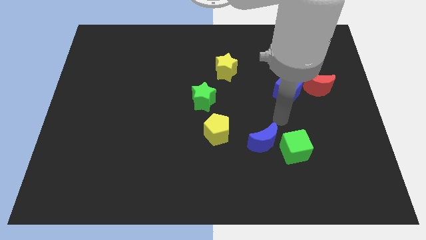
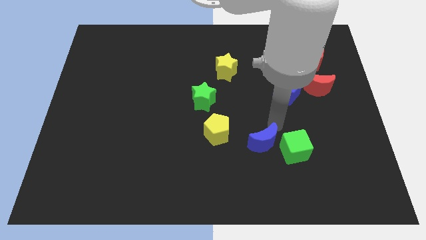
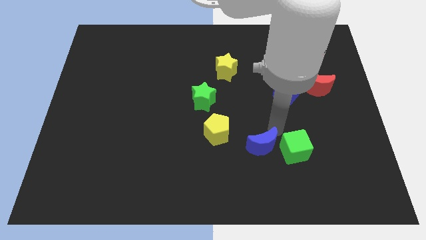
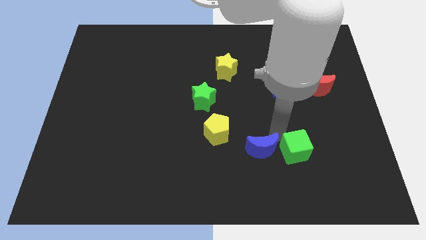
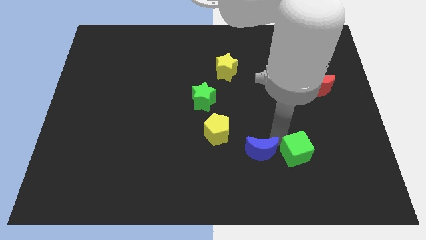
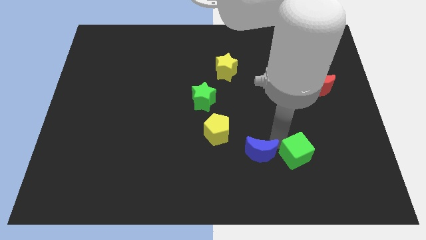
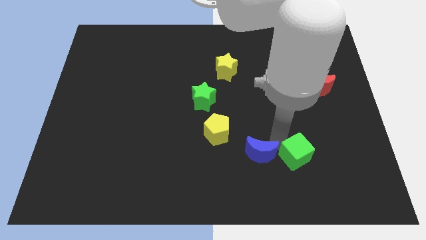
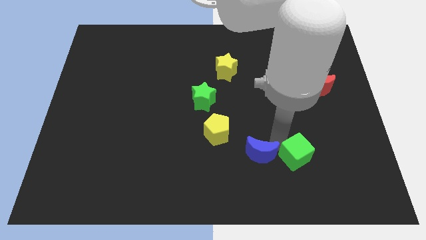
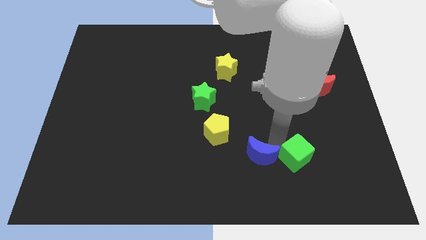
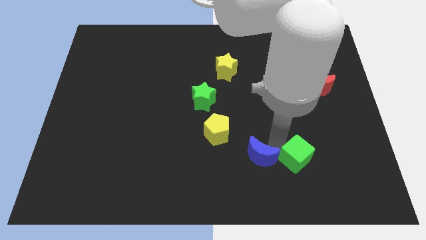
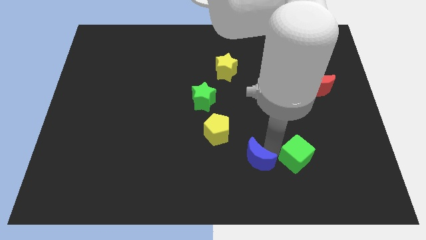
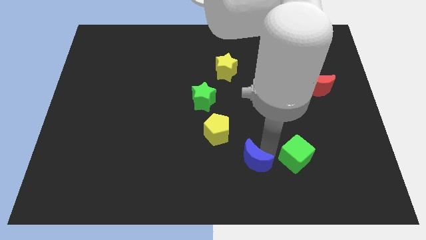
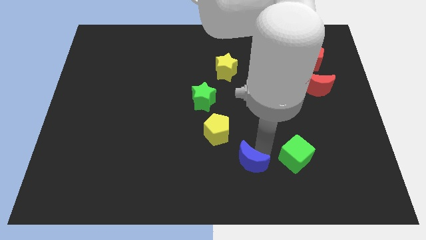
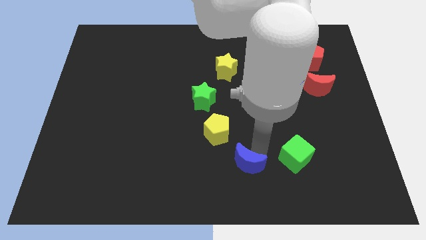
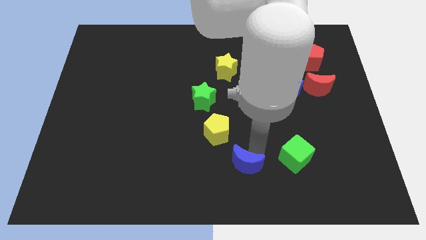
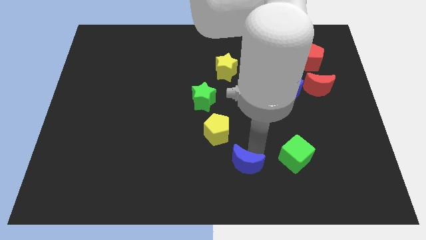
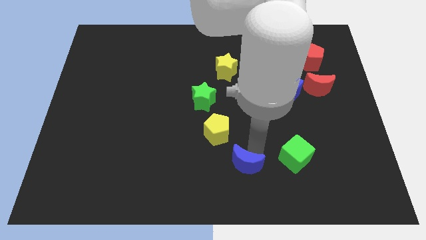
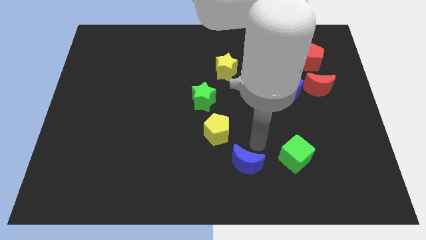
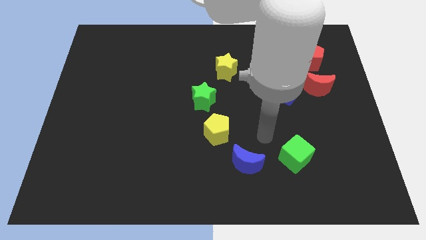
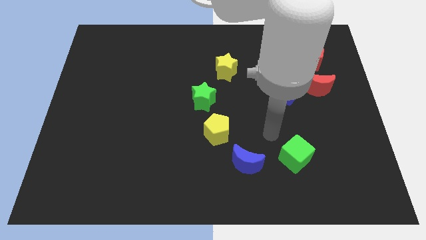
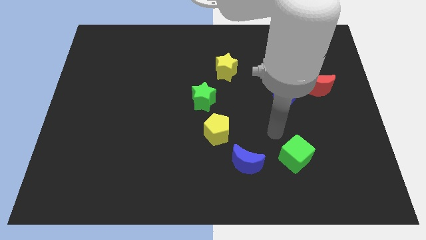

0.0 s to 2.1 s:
push the blue moon away from the green cube

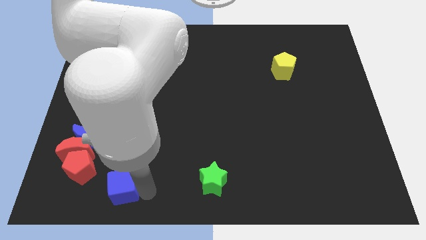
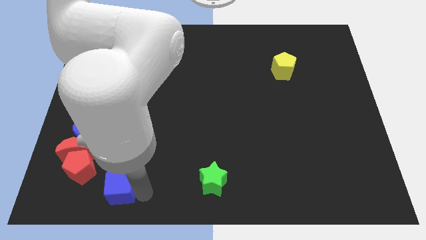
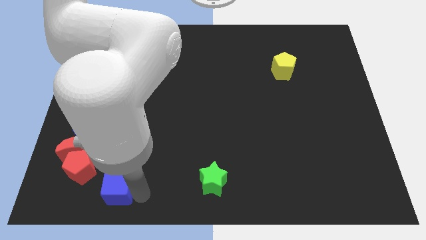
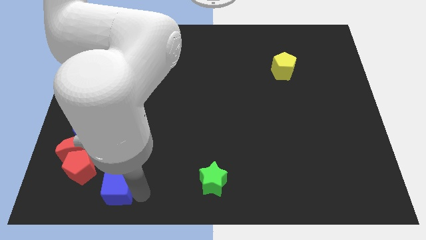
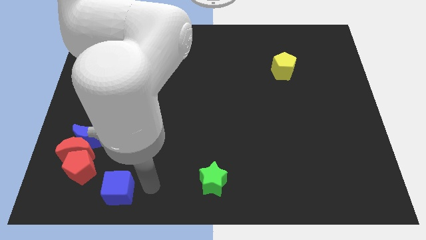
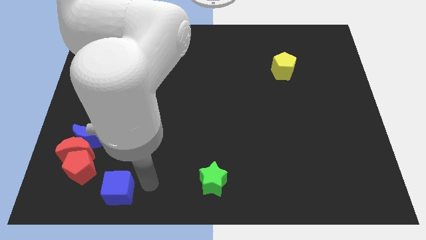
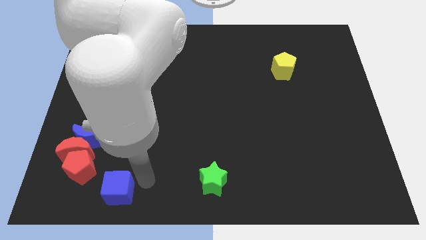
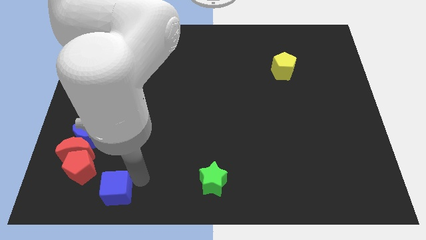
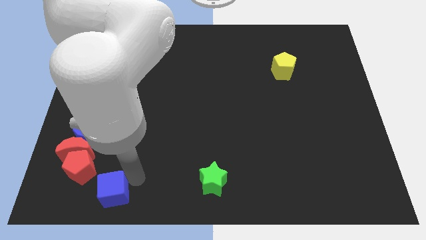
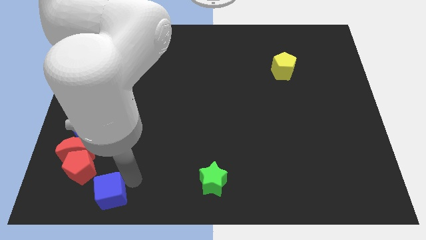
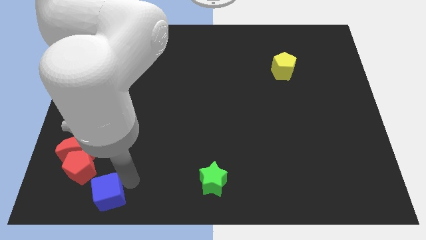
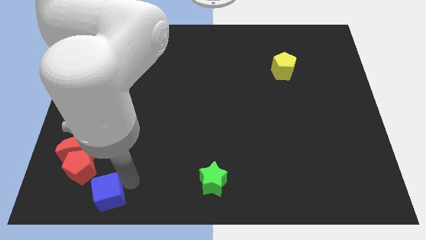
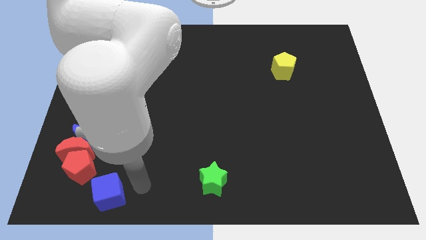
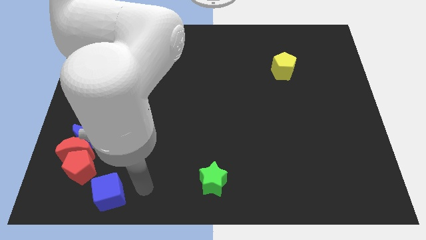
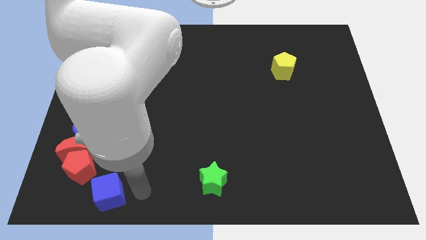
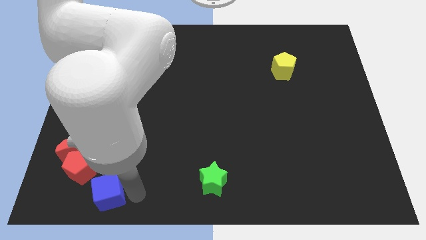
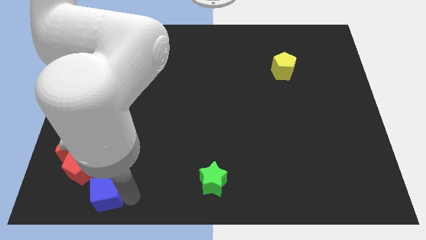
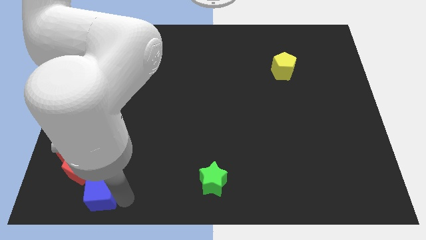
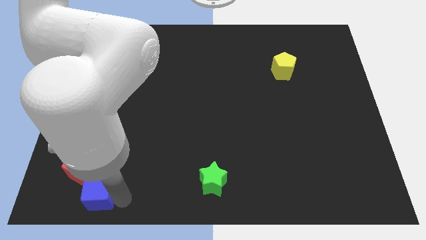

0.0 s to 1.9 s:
place the blue cube towards the bottom of the red pentagon

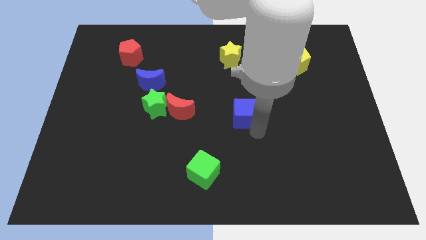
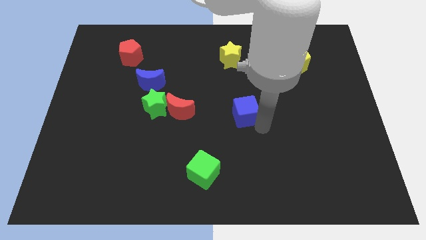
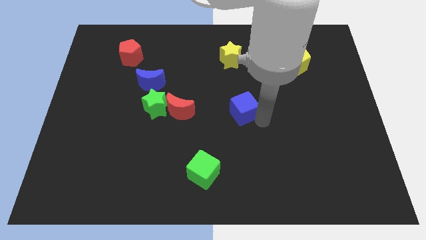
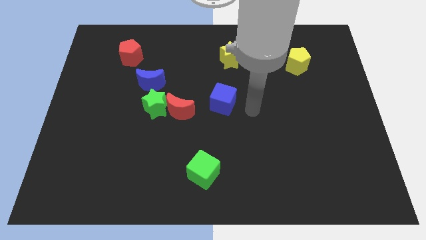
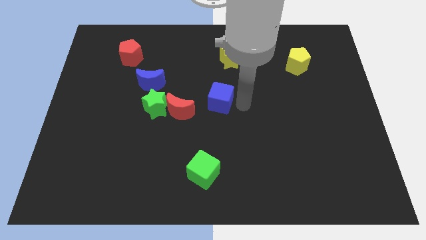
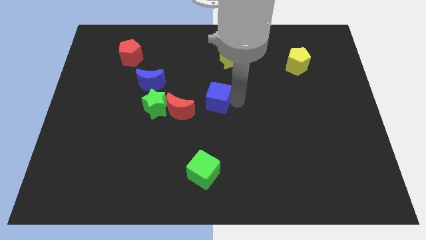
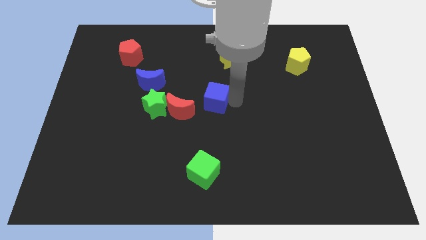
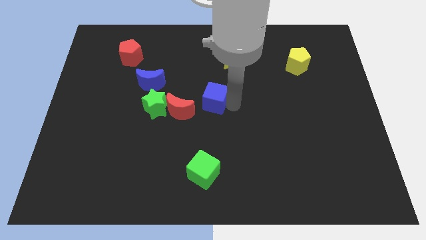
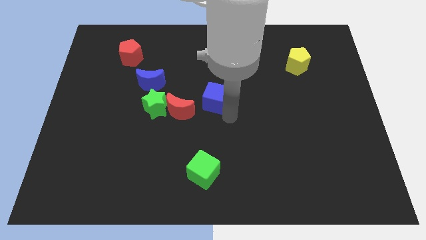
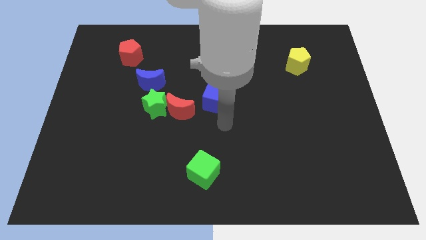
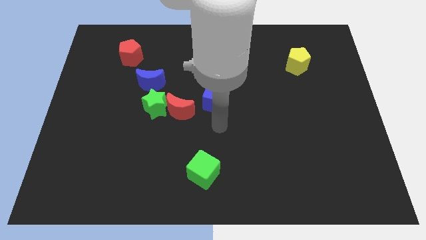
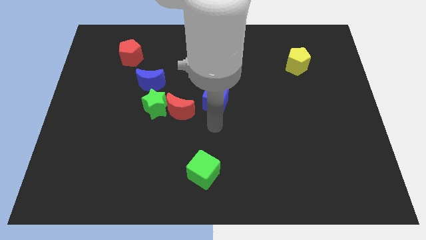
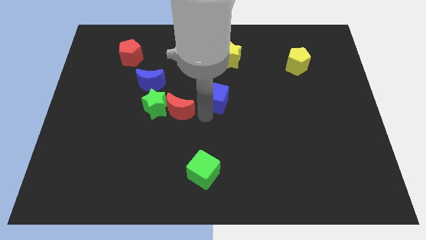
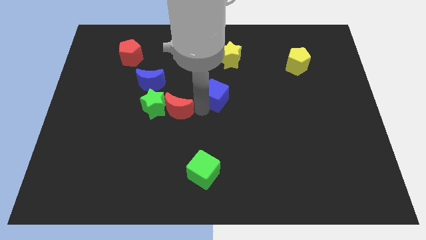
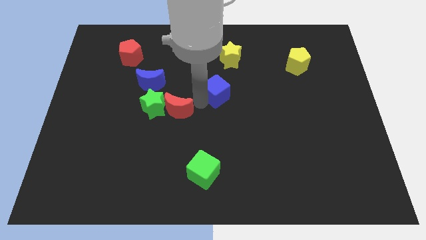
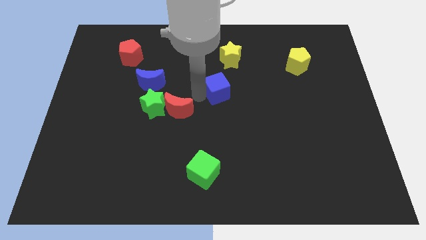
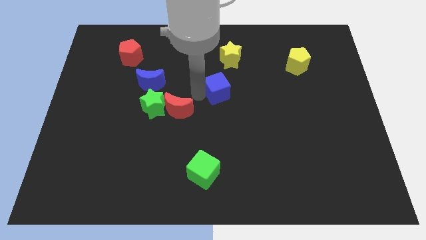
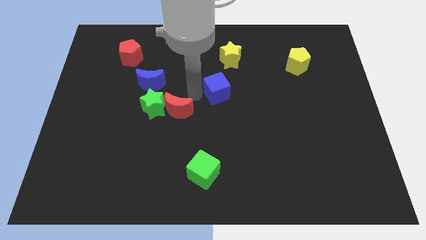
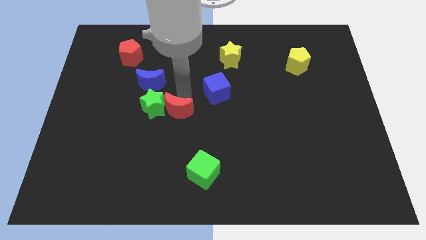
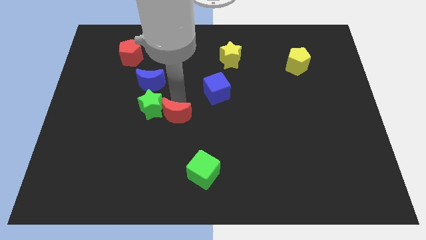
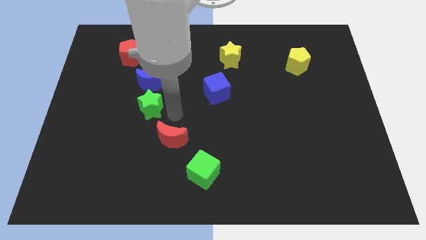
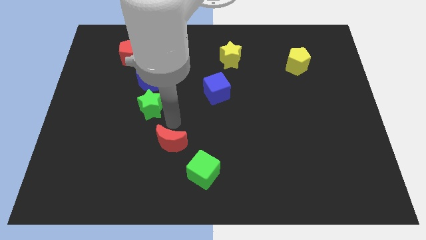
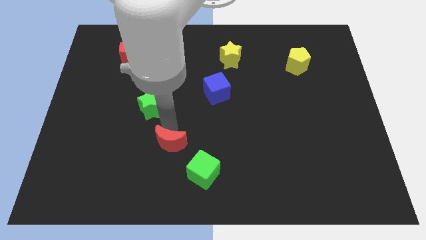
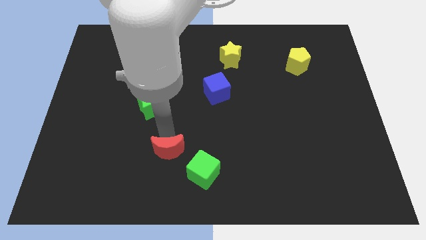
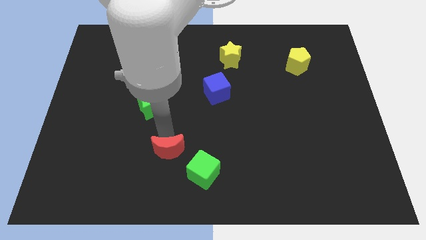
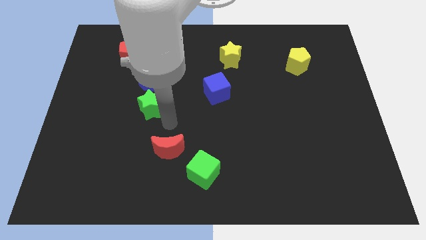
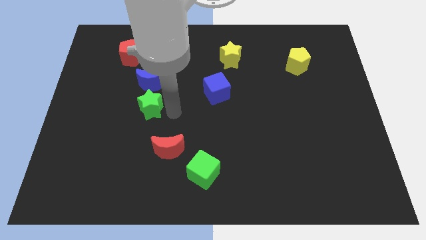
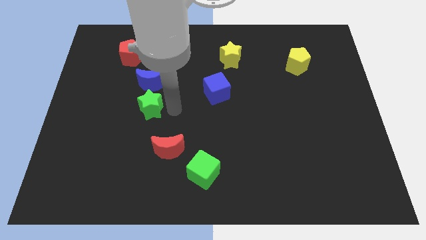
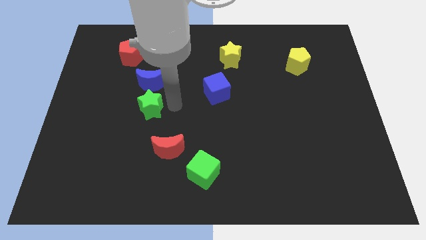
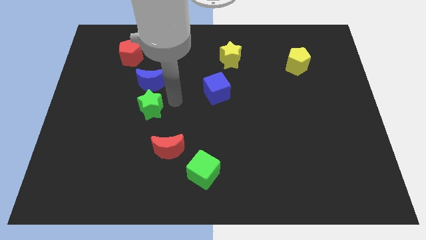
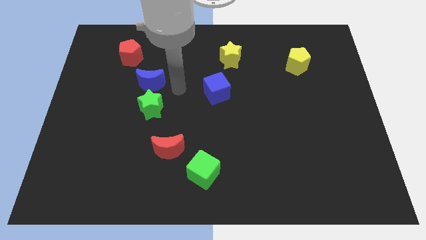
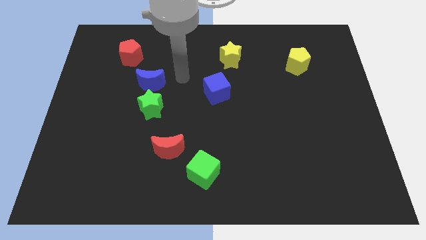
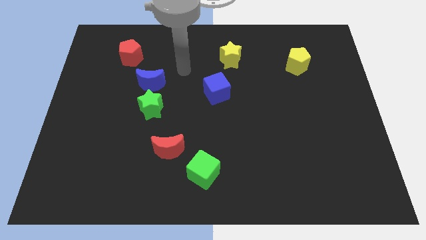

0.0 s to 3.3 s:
place the red moon diagonal to the green cube

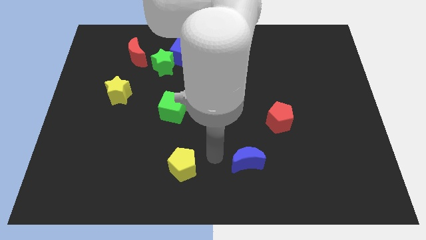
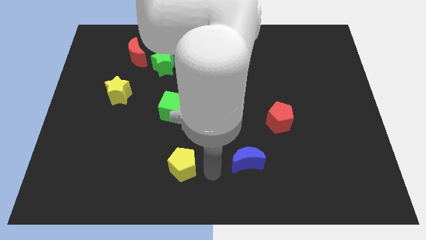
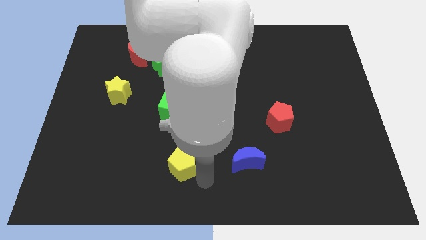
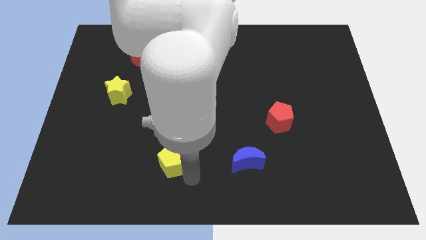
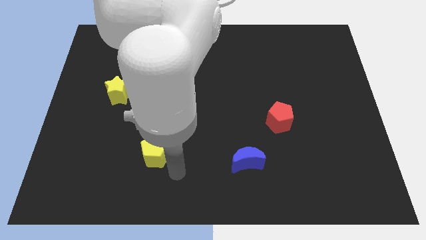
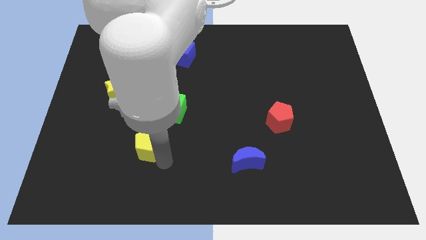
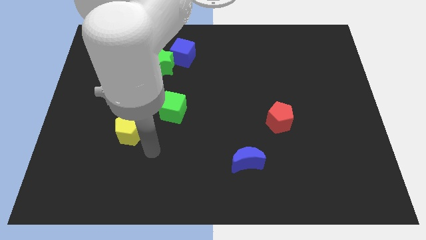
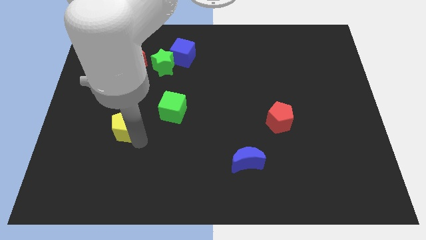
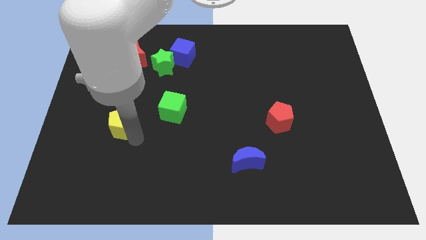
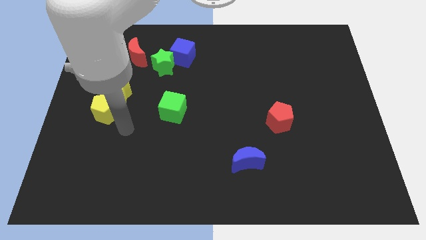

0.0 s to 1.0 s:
push yellow star pentagon below yellow star

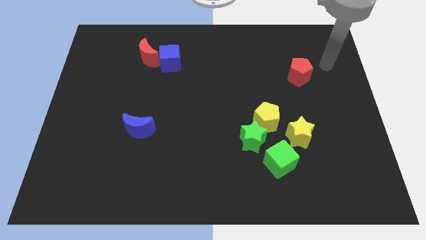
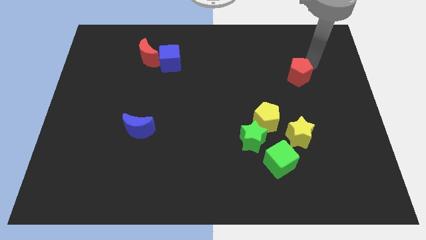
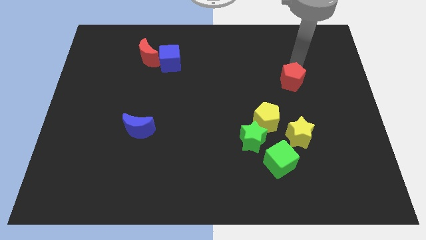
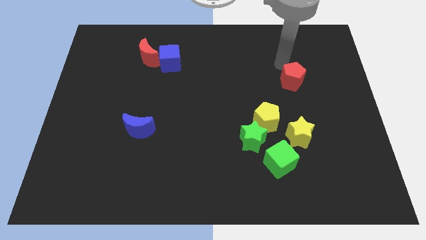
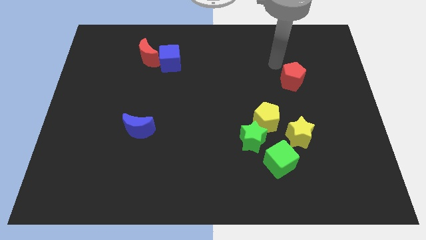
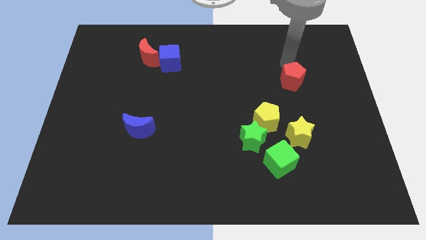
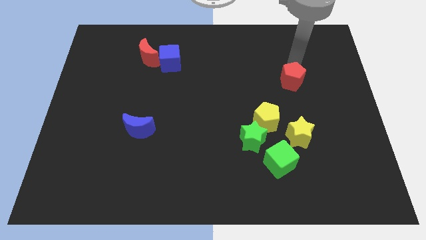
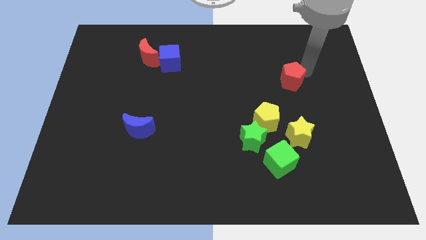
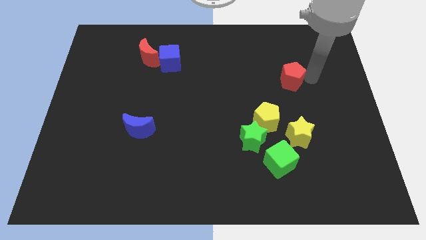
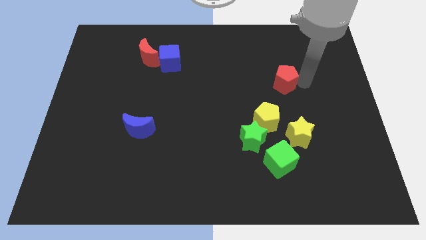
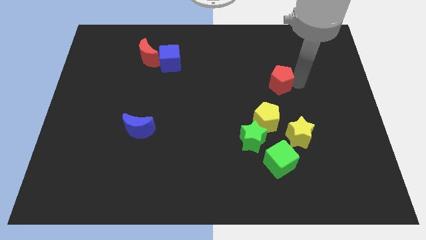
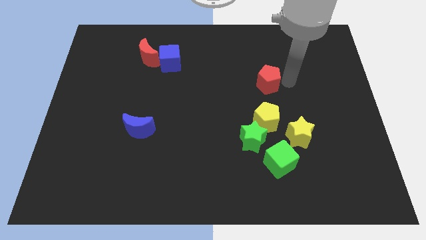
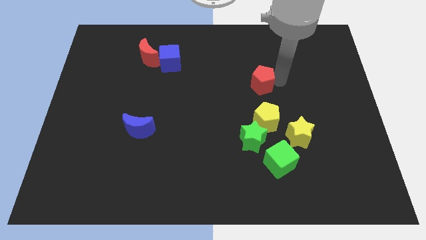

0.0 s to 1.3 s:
move the red pentagon above the yellow pentagon
